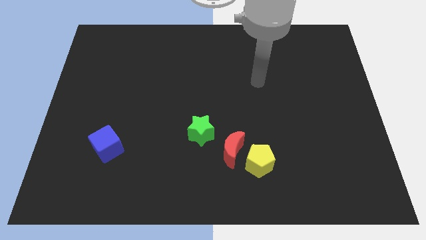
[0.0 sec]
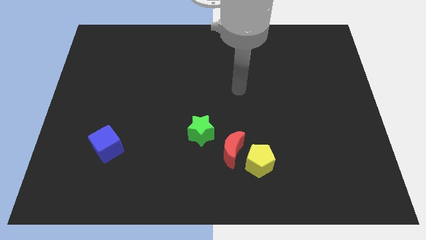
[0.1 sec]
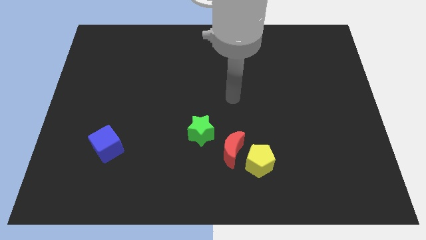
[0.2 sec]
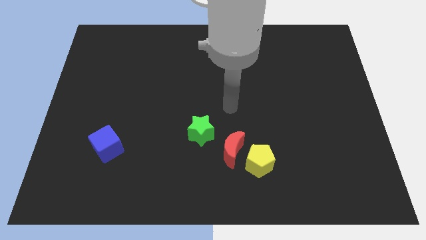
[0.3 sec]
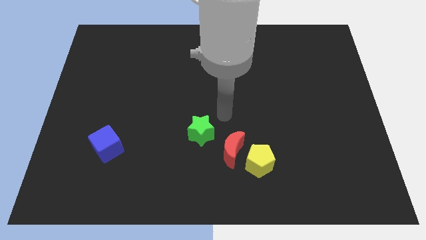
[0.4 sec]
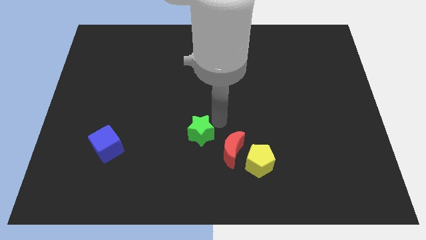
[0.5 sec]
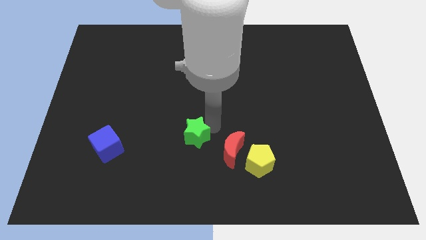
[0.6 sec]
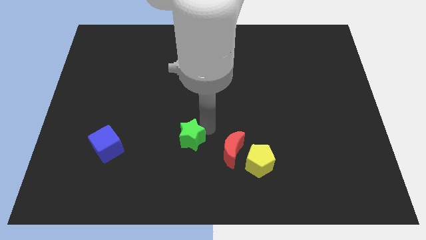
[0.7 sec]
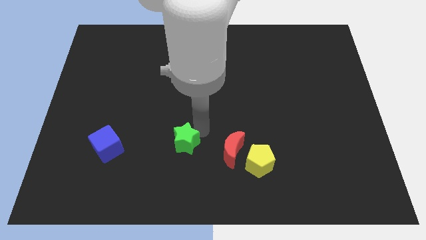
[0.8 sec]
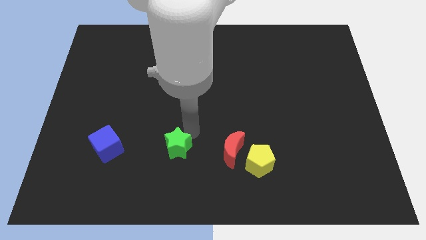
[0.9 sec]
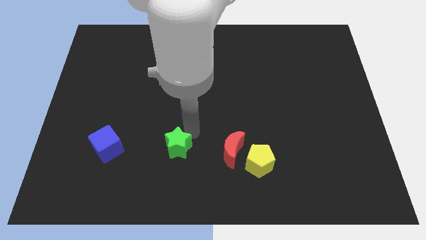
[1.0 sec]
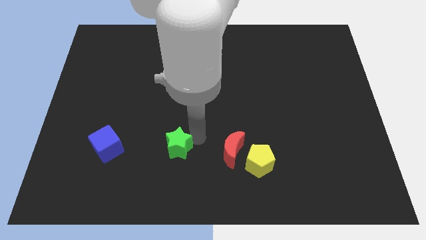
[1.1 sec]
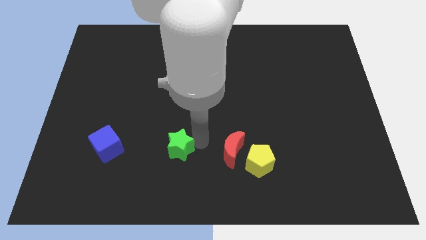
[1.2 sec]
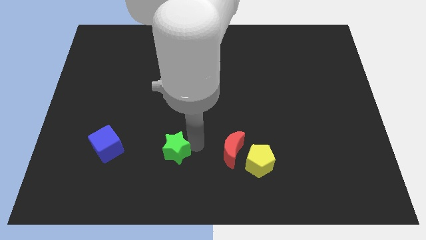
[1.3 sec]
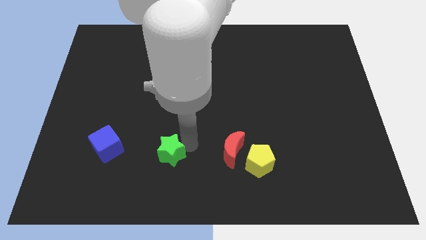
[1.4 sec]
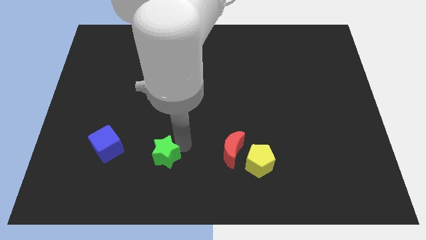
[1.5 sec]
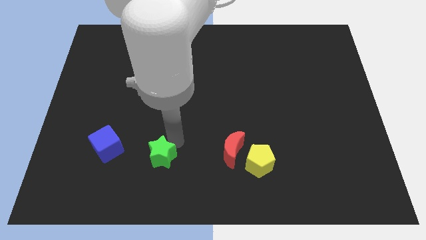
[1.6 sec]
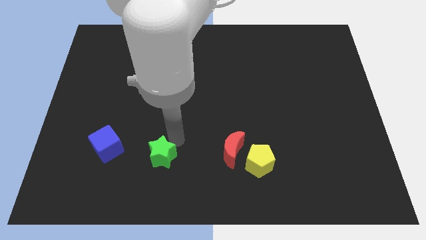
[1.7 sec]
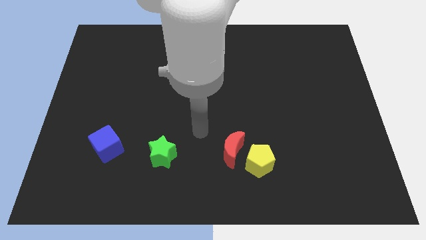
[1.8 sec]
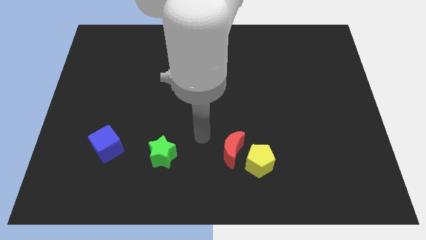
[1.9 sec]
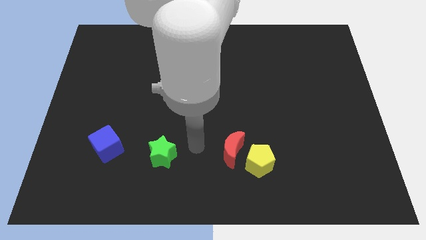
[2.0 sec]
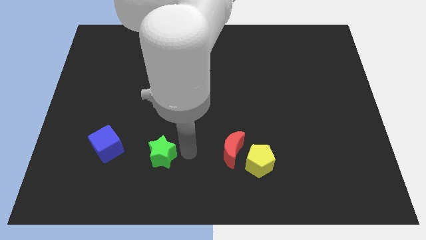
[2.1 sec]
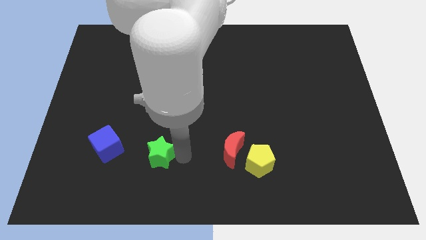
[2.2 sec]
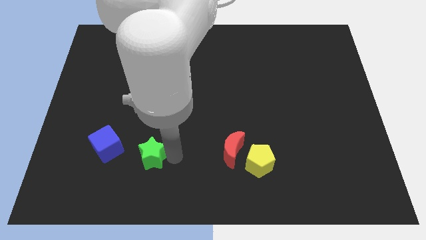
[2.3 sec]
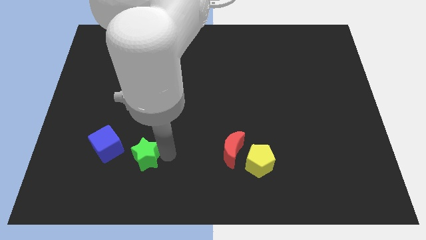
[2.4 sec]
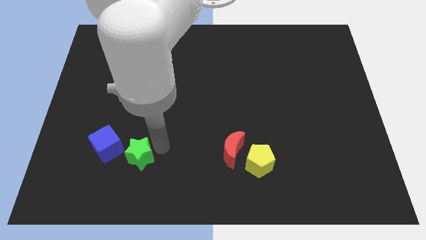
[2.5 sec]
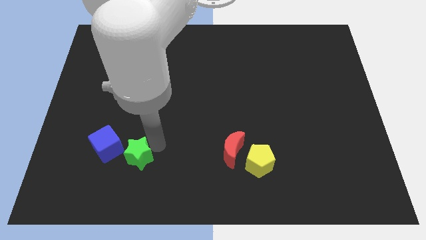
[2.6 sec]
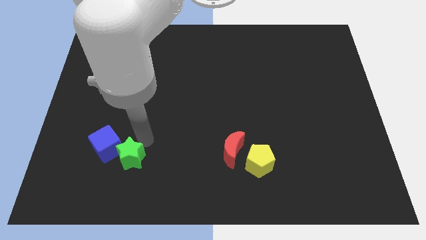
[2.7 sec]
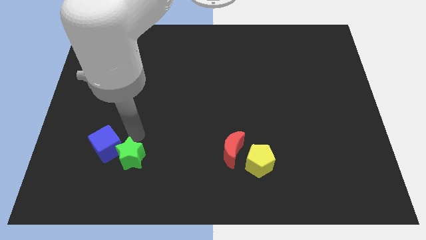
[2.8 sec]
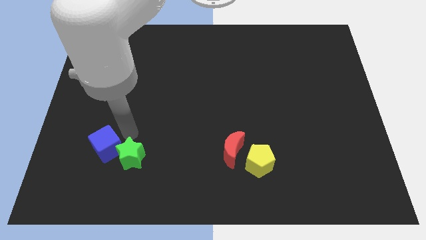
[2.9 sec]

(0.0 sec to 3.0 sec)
move the green star towards the blue block

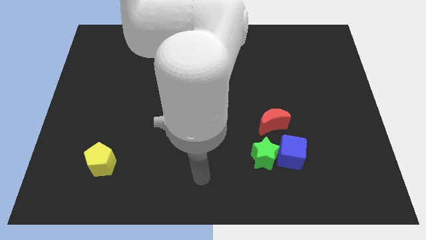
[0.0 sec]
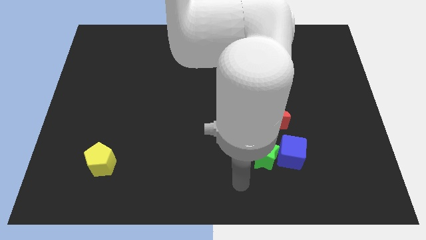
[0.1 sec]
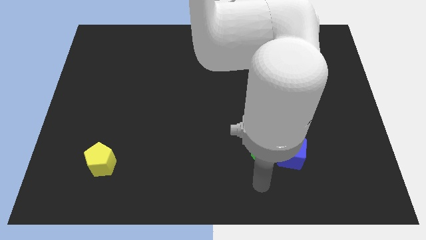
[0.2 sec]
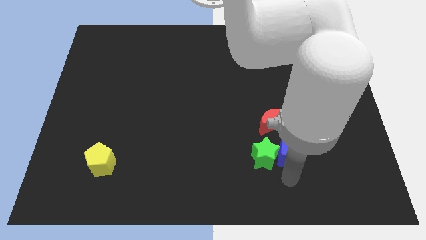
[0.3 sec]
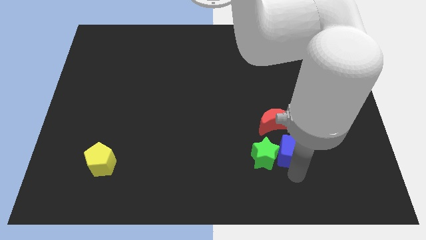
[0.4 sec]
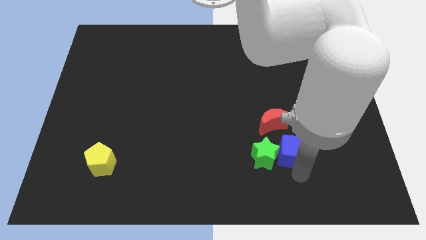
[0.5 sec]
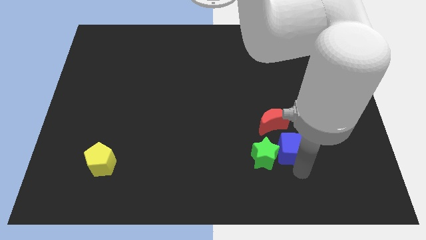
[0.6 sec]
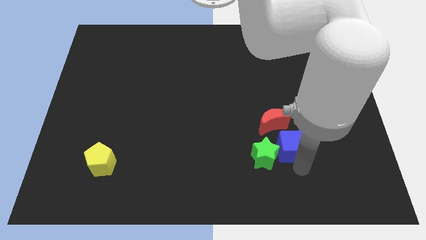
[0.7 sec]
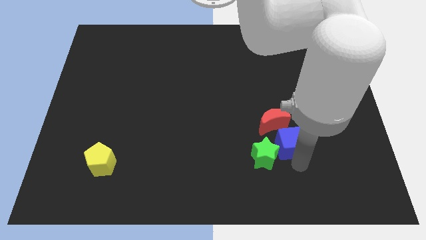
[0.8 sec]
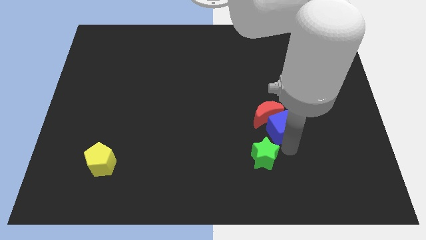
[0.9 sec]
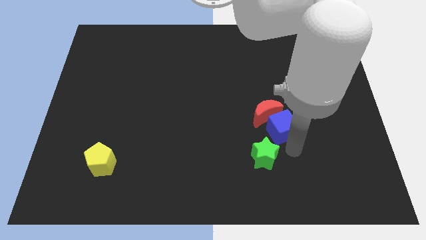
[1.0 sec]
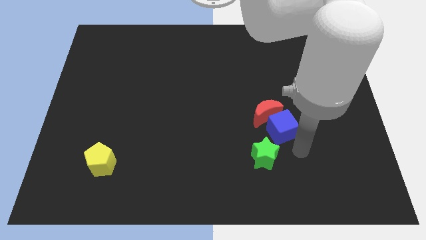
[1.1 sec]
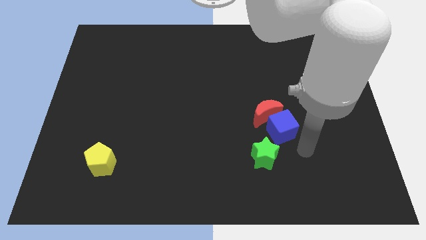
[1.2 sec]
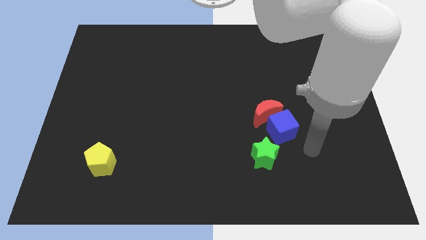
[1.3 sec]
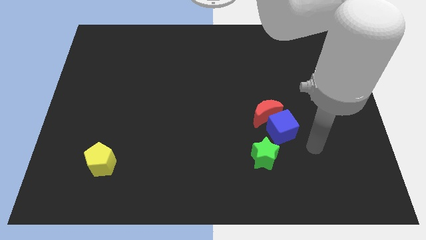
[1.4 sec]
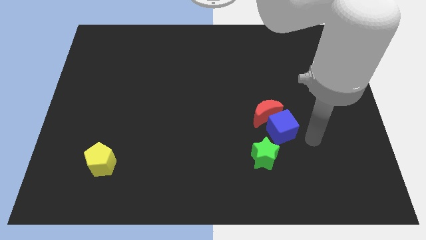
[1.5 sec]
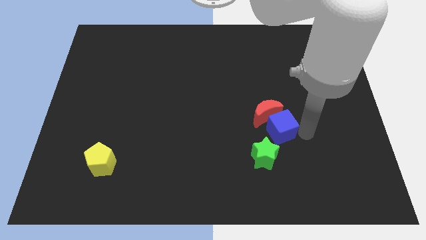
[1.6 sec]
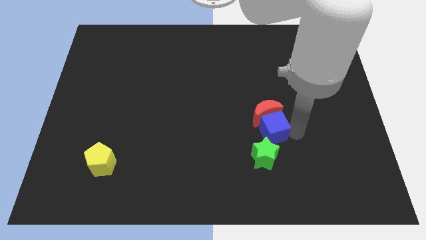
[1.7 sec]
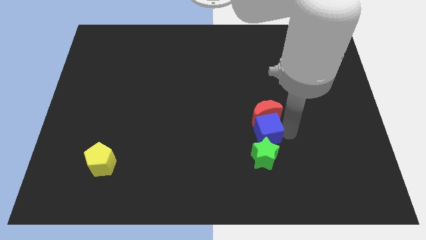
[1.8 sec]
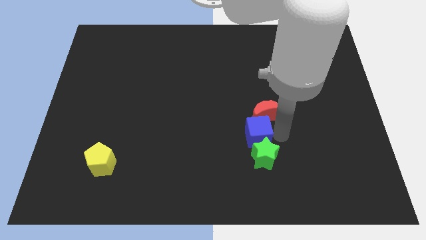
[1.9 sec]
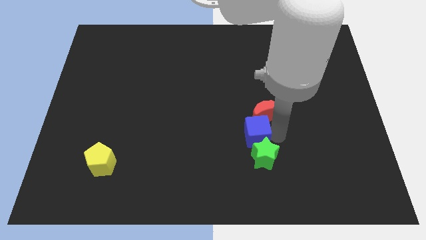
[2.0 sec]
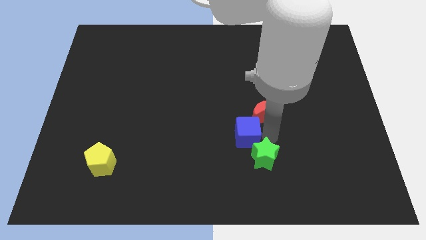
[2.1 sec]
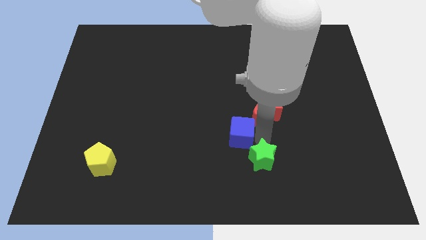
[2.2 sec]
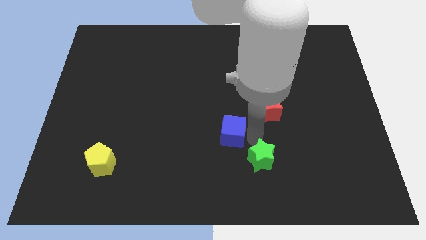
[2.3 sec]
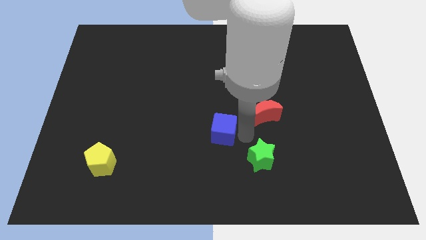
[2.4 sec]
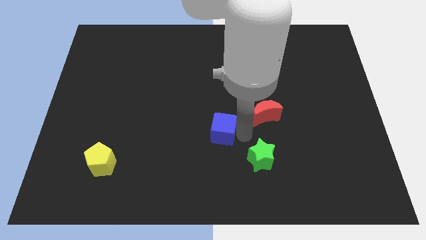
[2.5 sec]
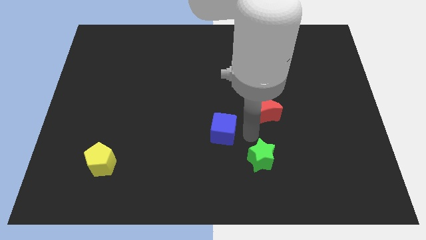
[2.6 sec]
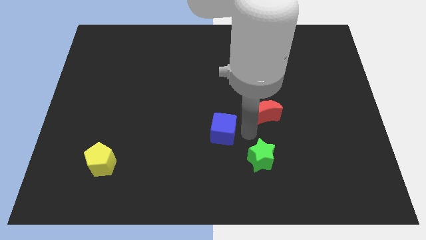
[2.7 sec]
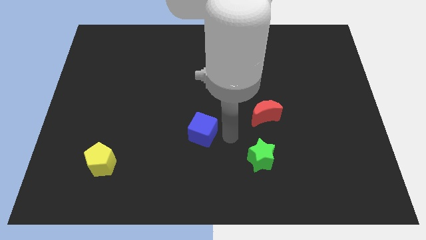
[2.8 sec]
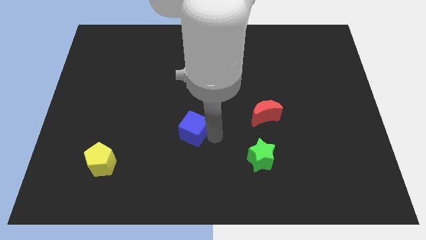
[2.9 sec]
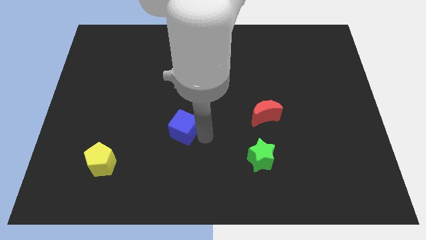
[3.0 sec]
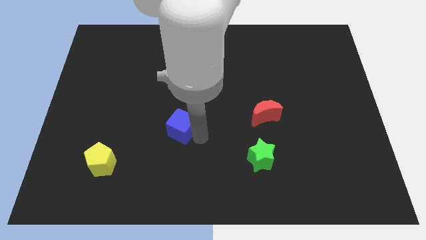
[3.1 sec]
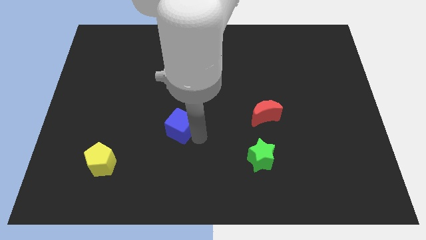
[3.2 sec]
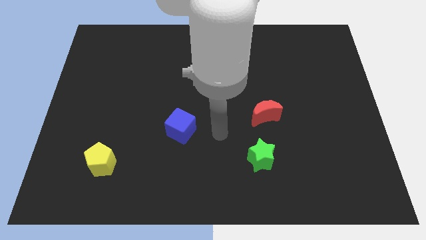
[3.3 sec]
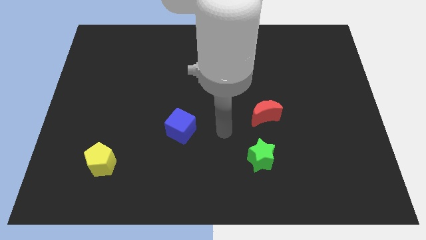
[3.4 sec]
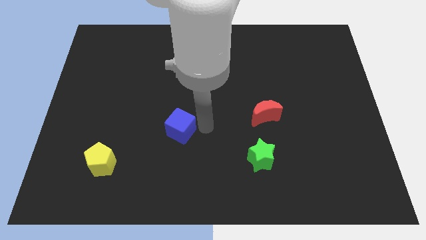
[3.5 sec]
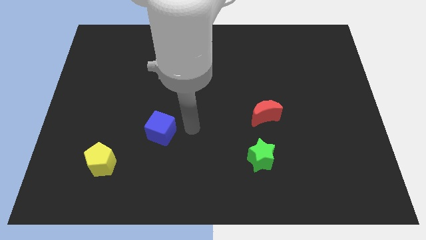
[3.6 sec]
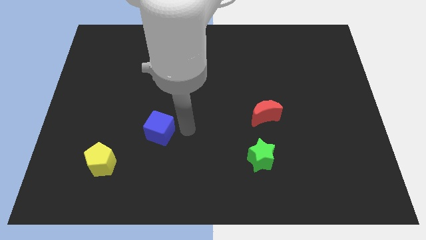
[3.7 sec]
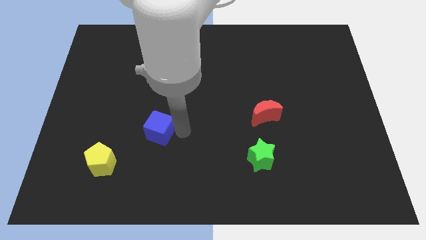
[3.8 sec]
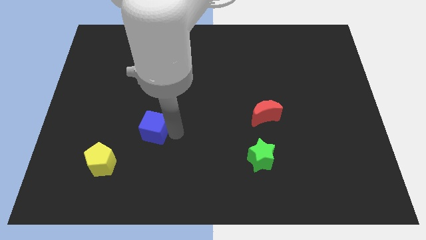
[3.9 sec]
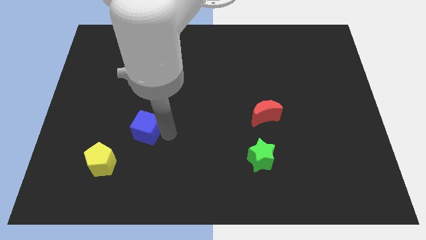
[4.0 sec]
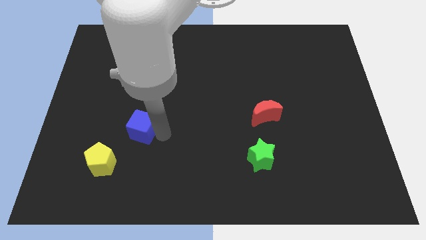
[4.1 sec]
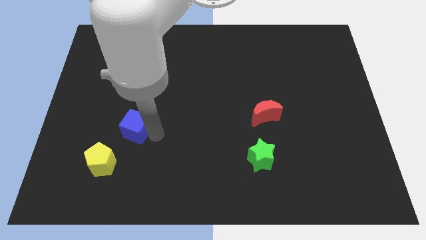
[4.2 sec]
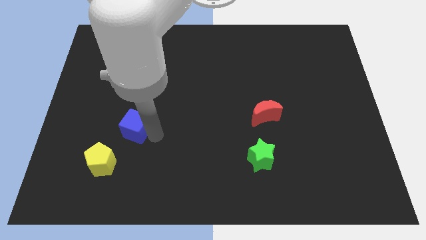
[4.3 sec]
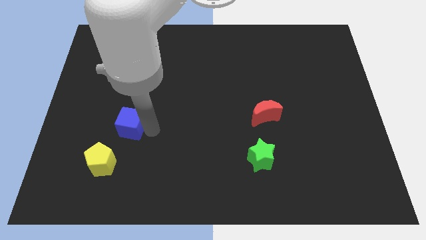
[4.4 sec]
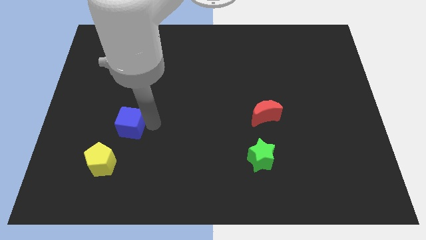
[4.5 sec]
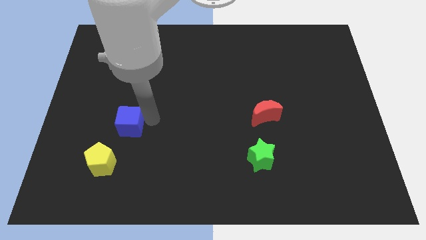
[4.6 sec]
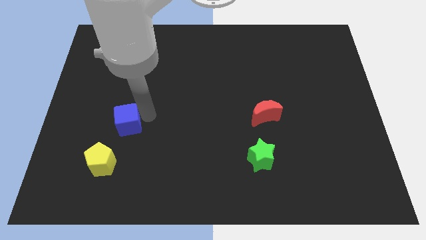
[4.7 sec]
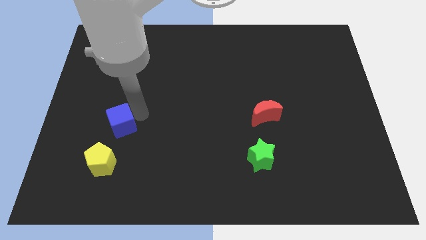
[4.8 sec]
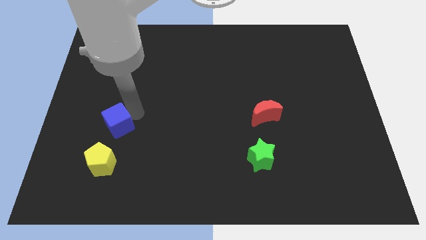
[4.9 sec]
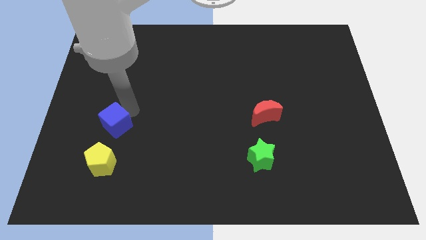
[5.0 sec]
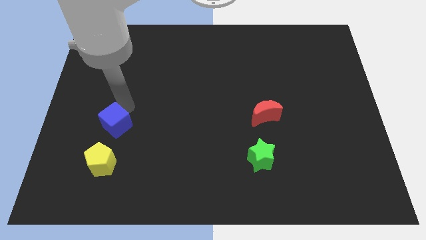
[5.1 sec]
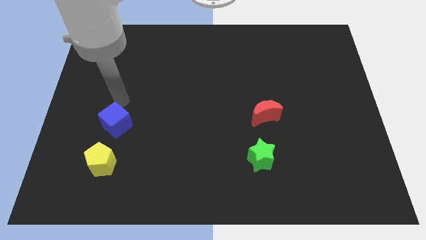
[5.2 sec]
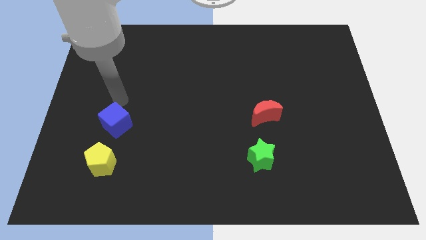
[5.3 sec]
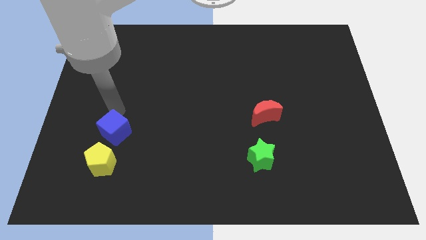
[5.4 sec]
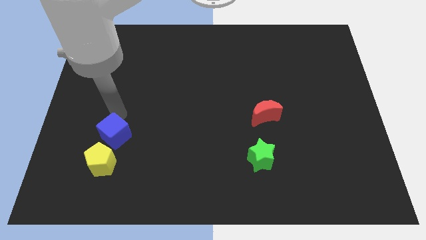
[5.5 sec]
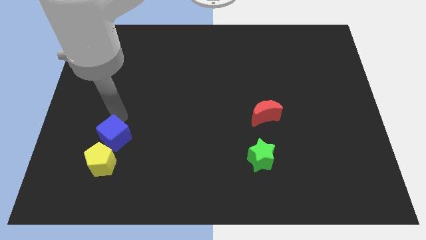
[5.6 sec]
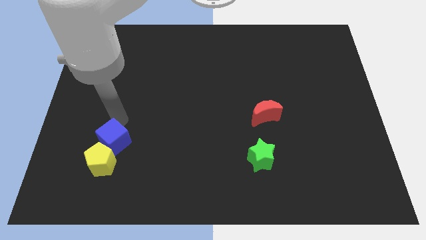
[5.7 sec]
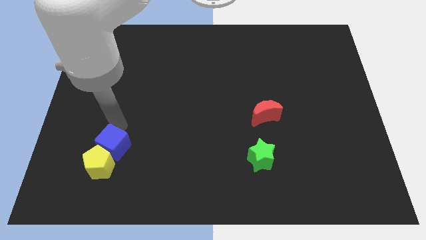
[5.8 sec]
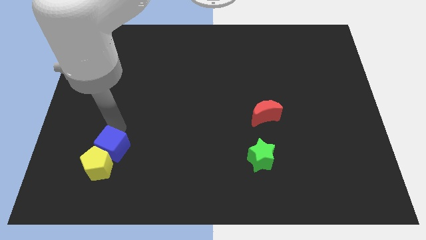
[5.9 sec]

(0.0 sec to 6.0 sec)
slide the cube close to the pentagon
